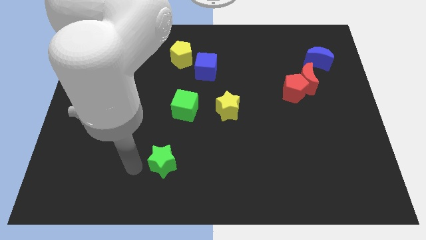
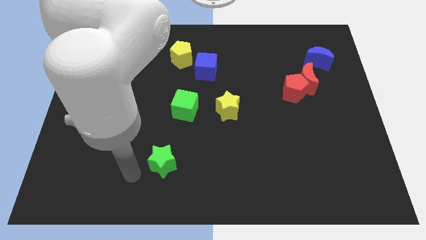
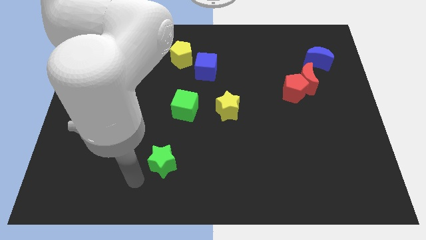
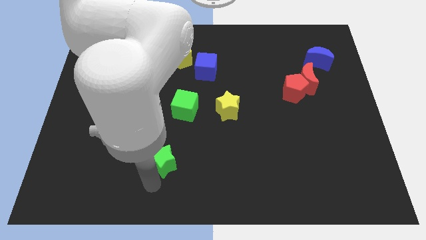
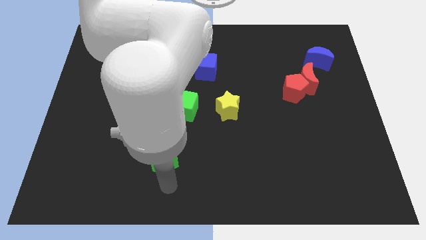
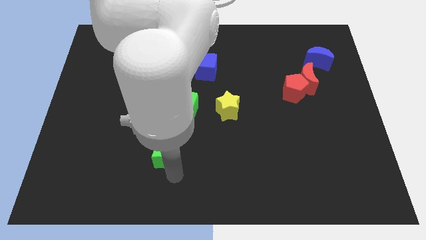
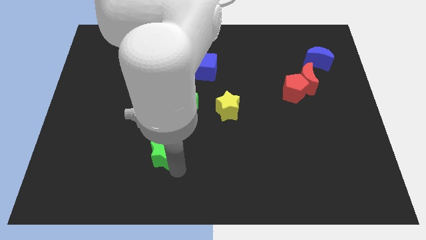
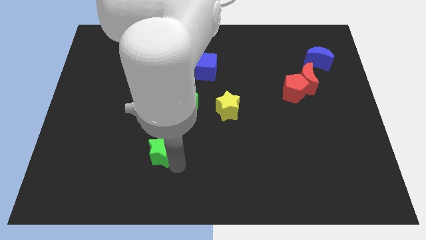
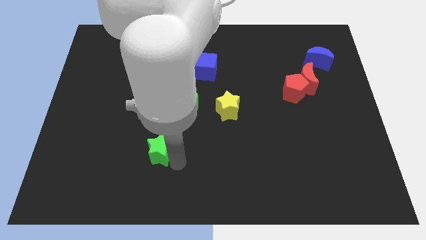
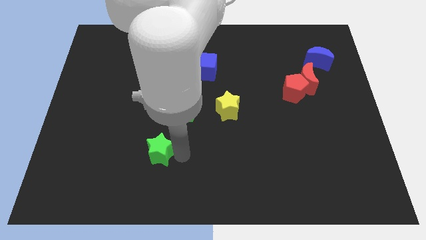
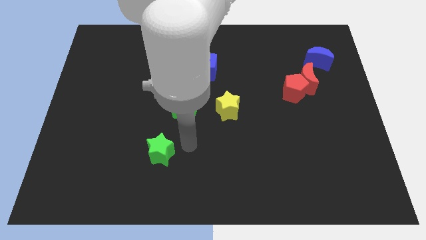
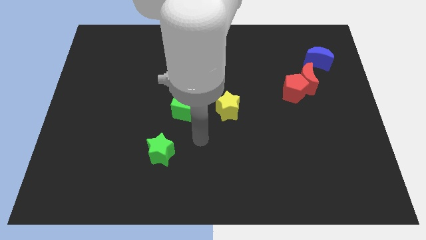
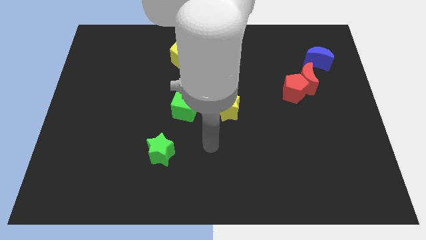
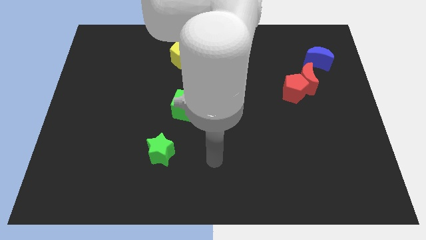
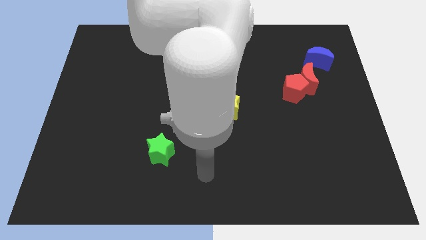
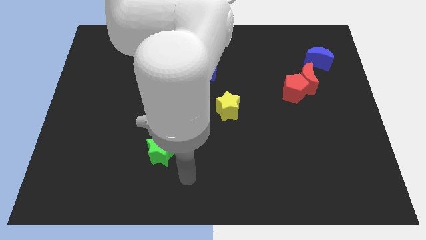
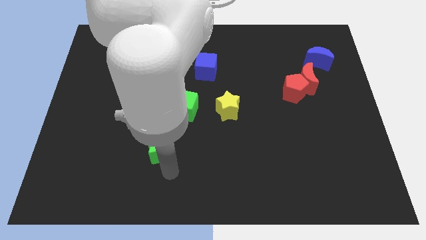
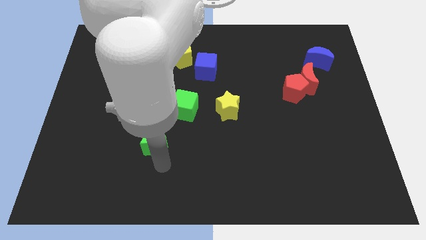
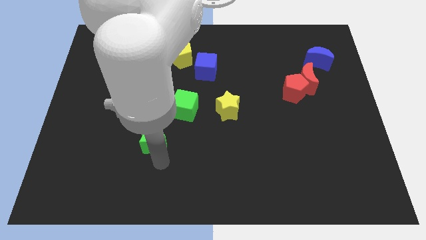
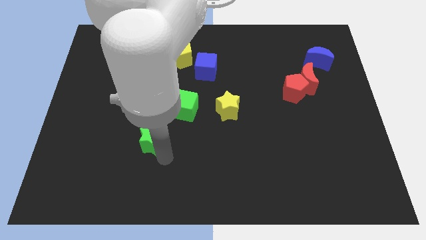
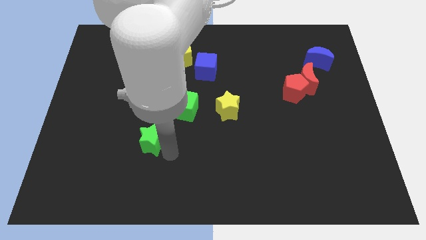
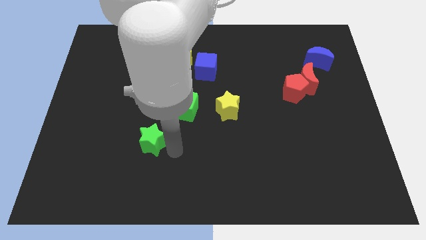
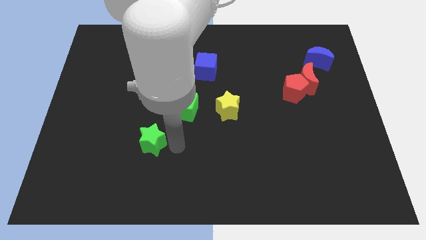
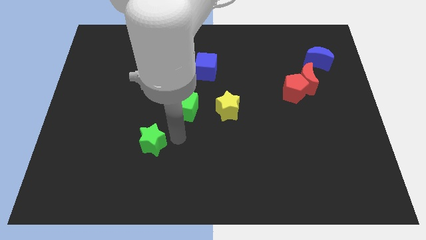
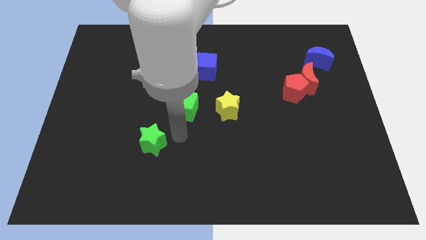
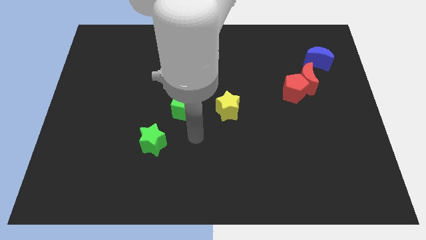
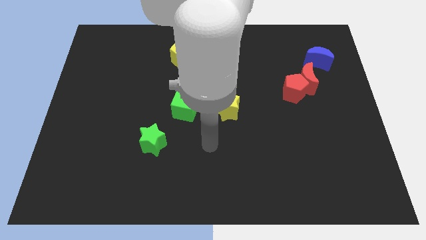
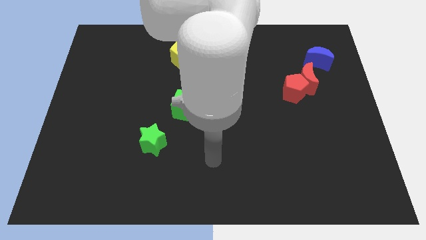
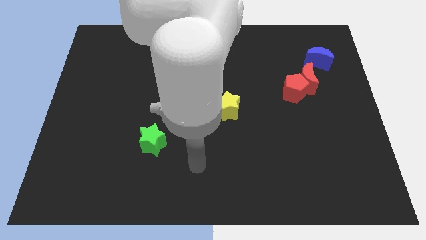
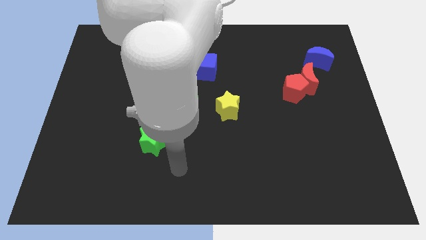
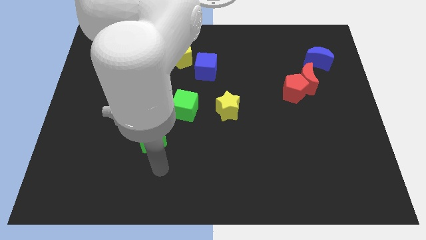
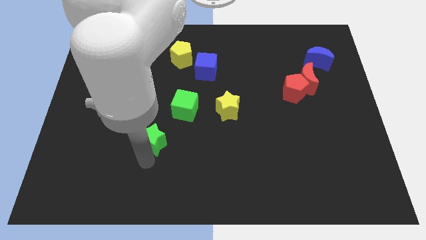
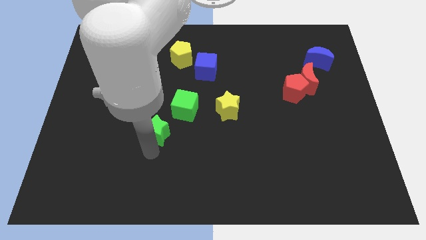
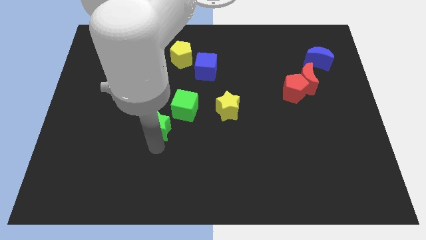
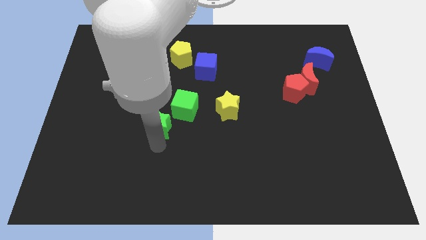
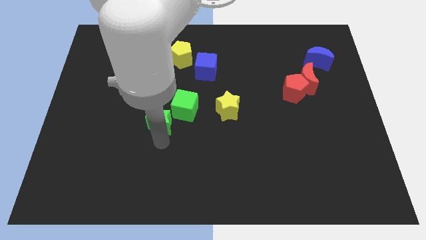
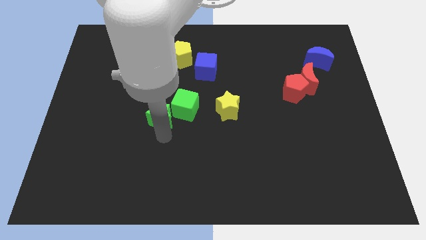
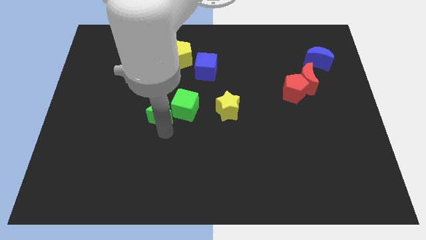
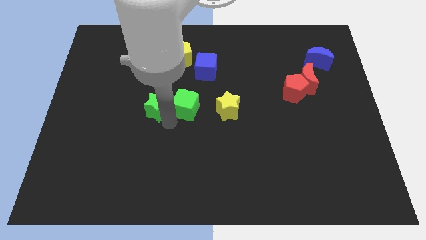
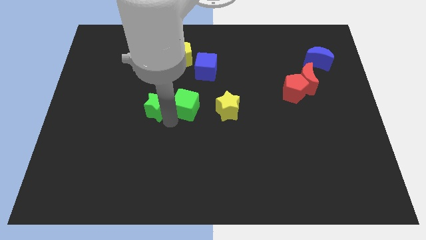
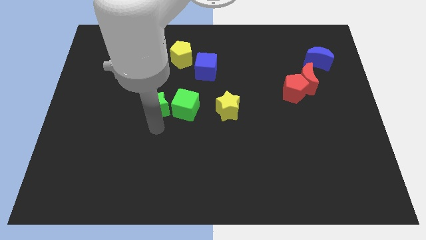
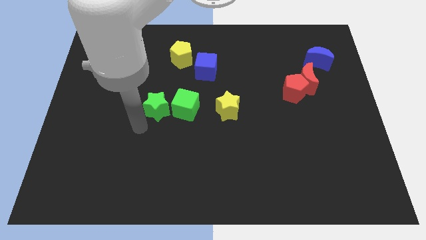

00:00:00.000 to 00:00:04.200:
push green star into green cube

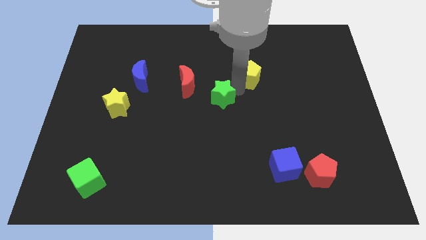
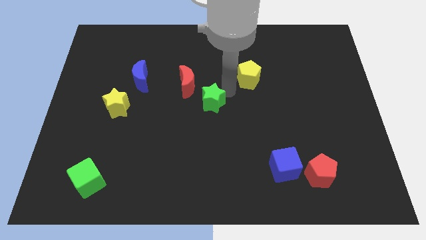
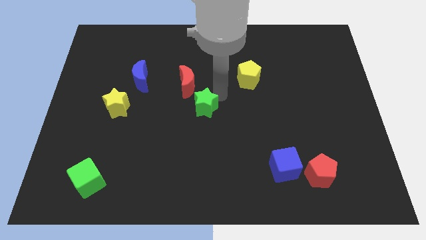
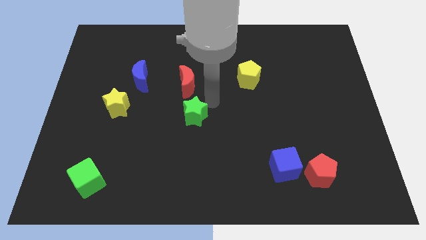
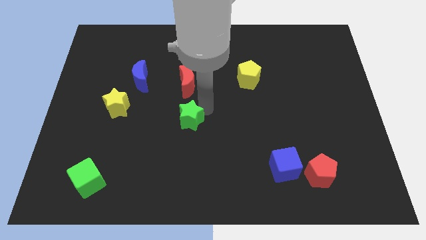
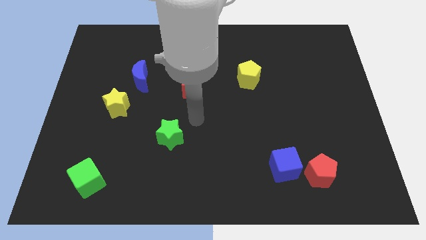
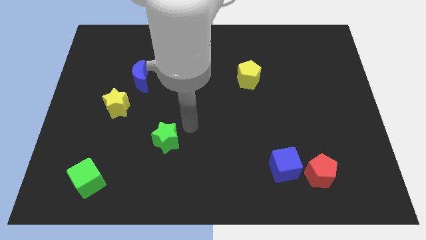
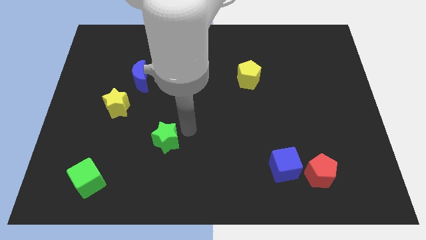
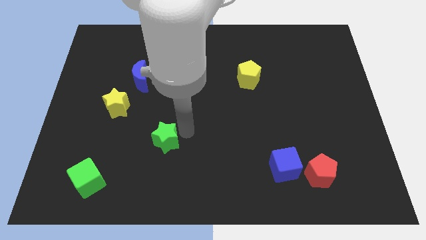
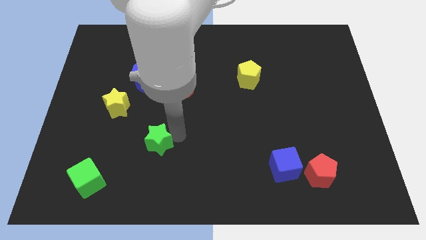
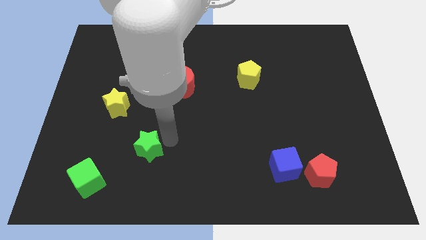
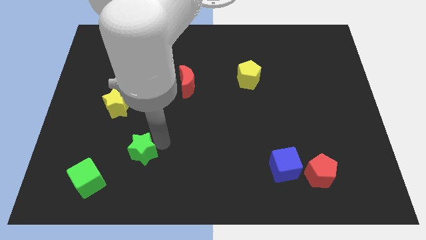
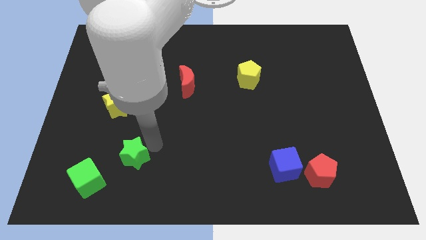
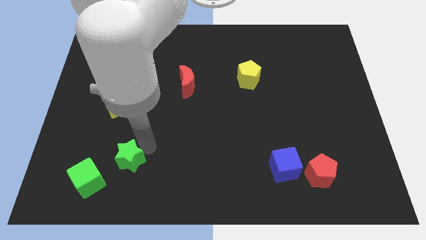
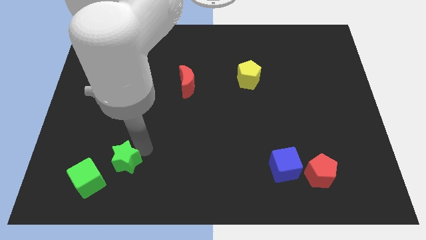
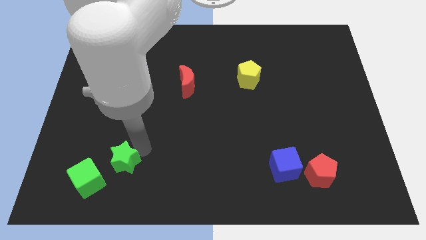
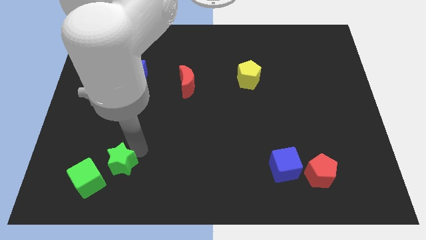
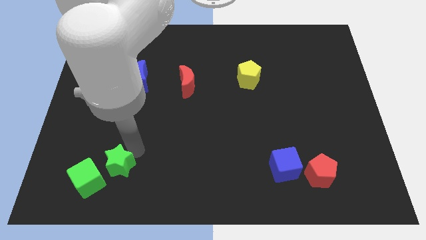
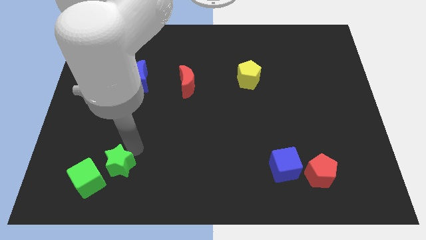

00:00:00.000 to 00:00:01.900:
place the green star diagonal top of green cube

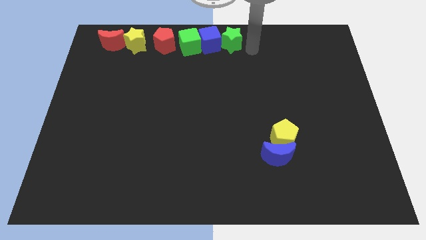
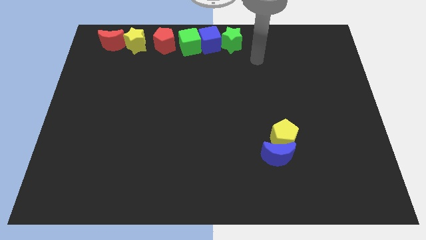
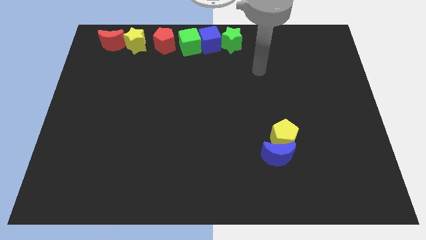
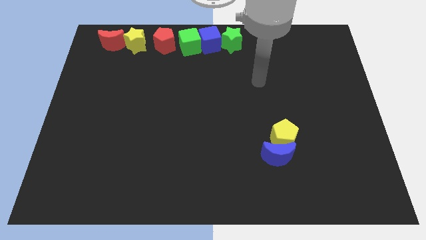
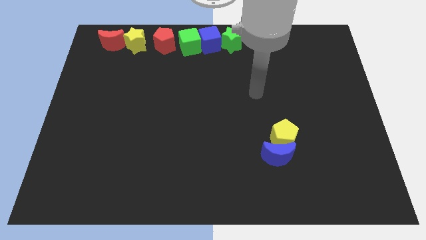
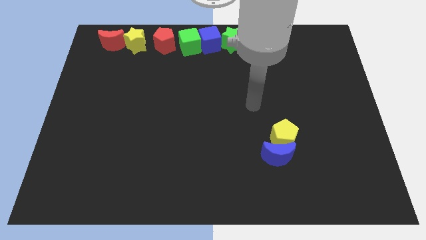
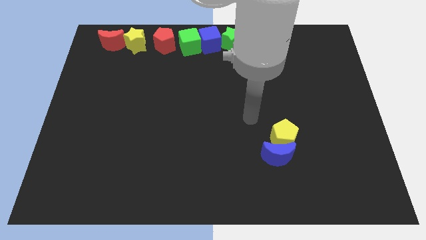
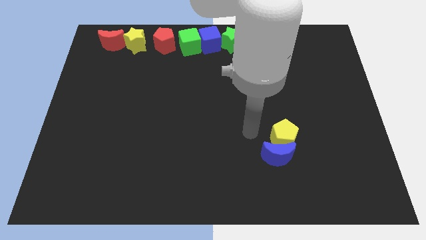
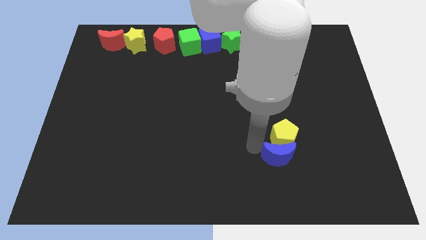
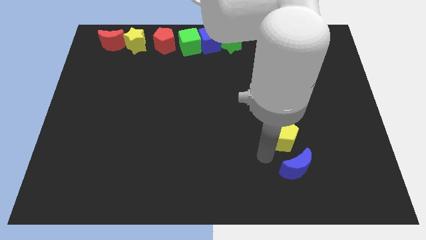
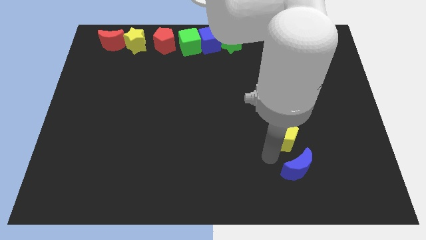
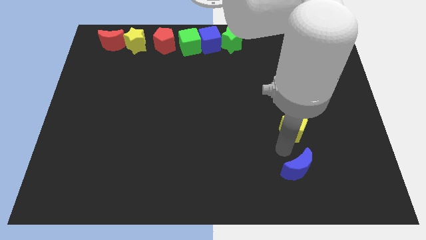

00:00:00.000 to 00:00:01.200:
separate the blue crescent from yellow pentagon

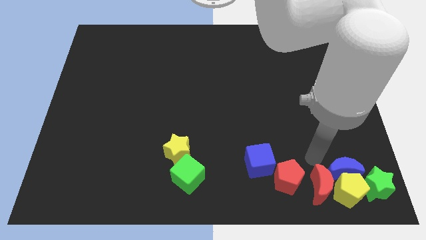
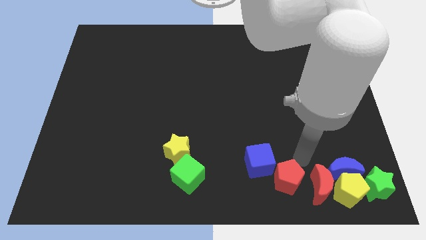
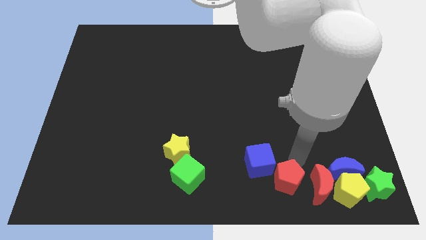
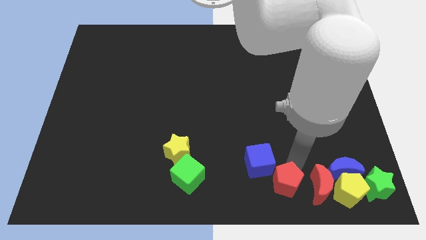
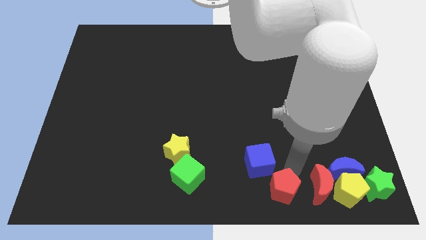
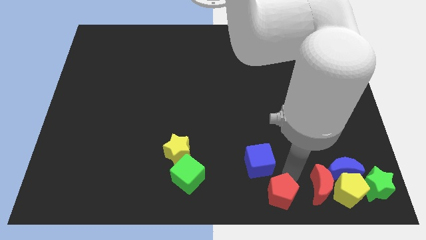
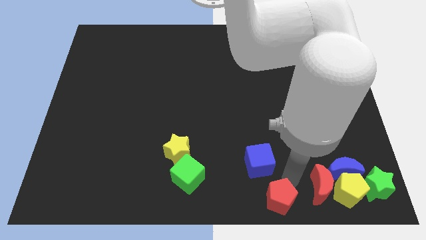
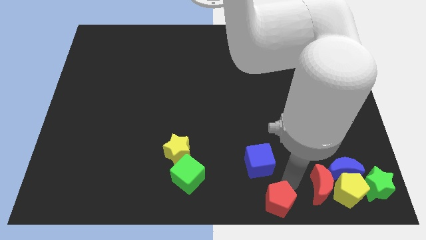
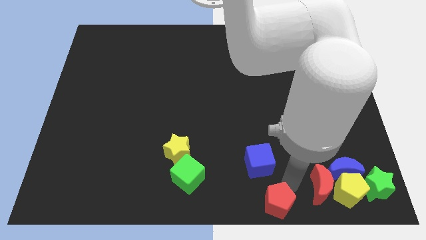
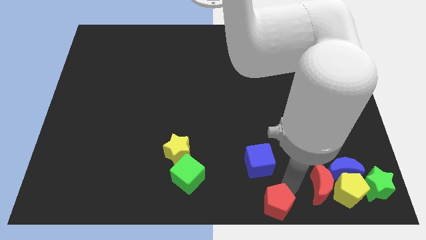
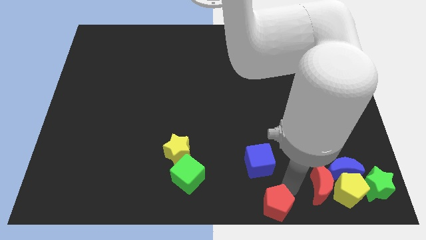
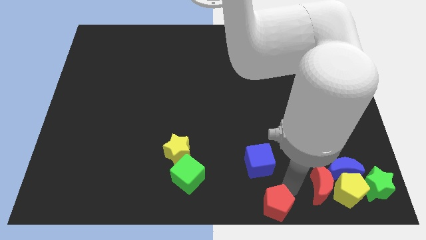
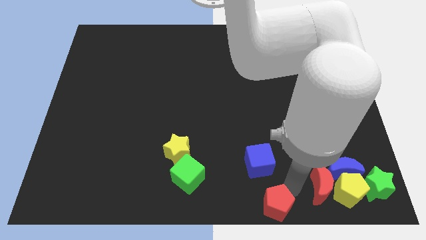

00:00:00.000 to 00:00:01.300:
move the red pentagon away from the blue cube

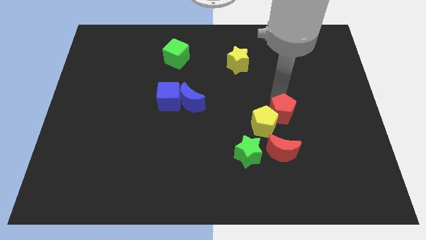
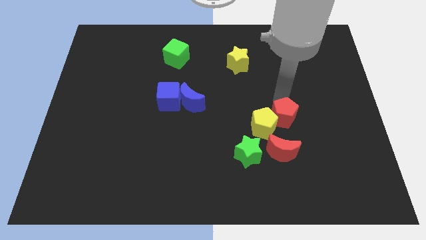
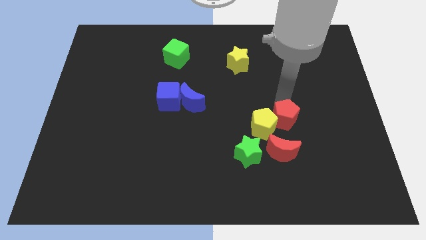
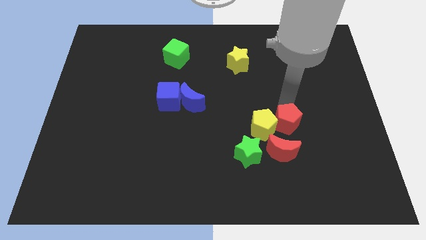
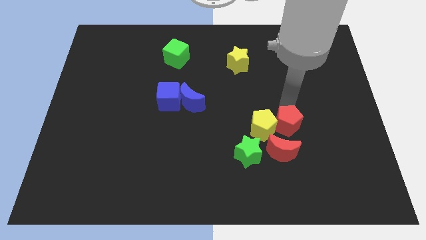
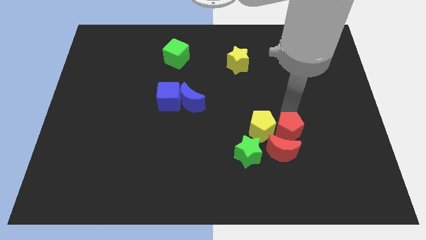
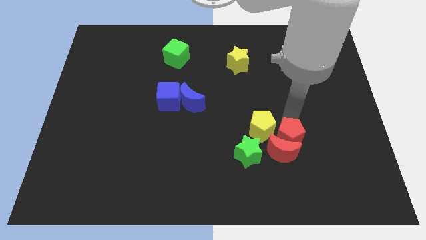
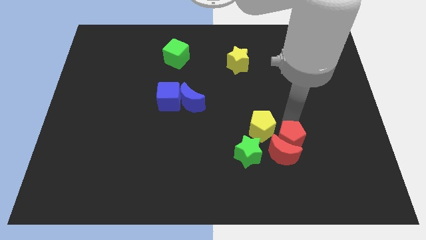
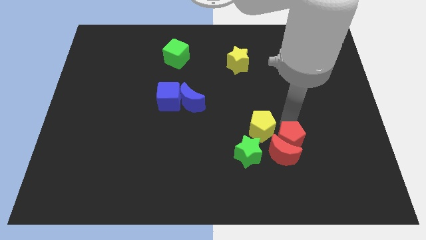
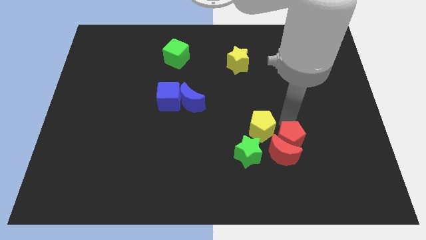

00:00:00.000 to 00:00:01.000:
push red pentagon slightly downwards
